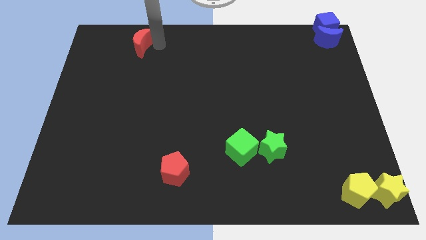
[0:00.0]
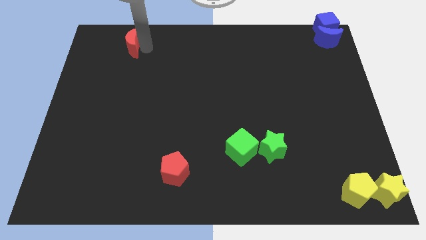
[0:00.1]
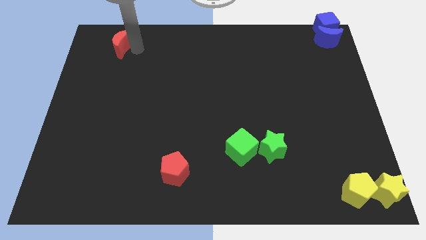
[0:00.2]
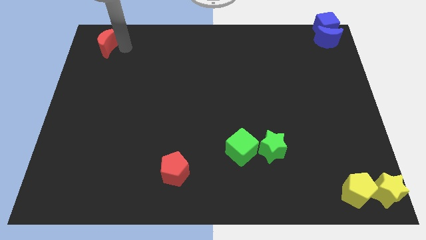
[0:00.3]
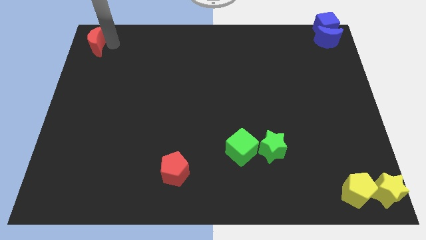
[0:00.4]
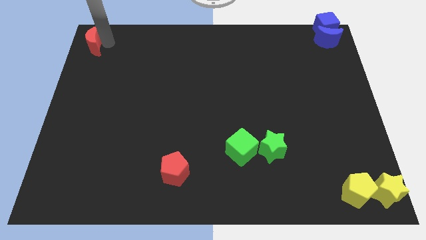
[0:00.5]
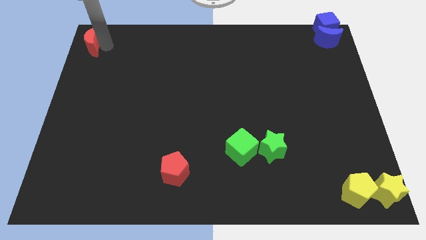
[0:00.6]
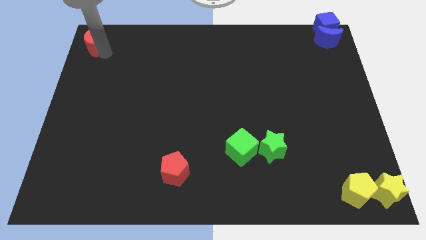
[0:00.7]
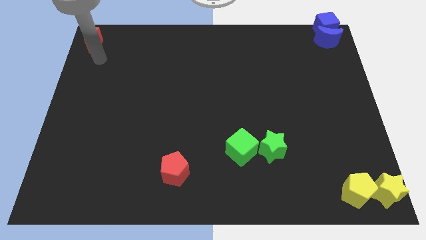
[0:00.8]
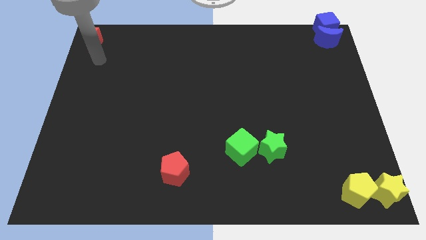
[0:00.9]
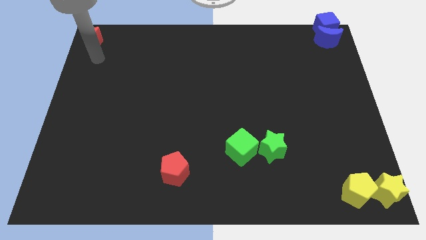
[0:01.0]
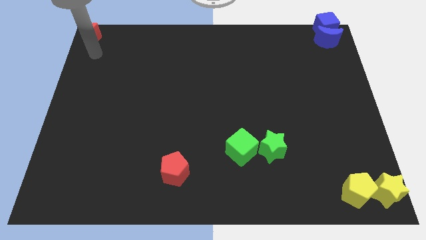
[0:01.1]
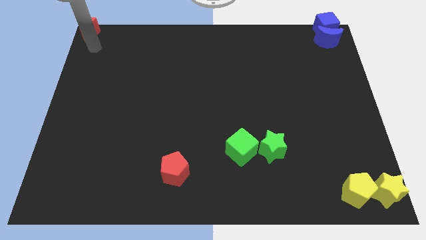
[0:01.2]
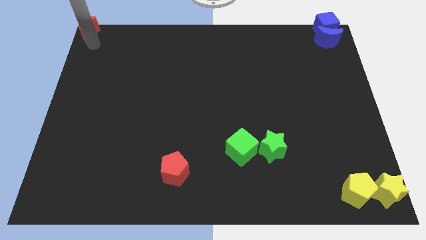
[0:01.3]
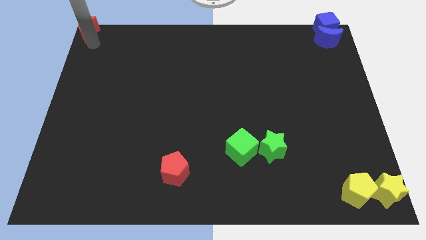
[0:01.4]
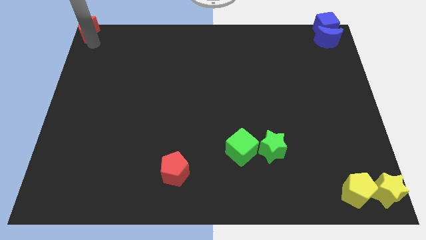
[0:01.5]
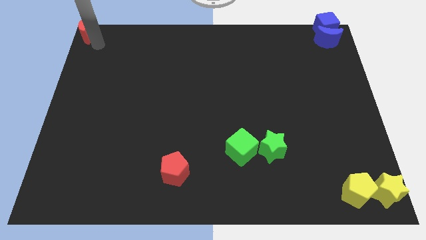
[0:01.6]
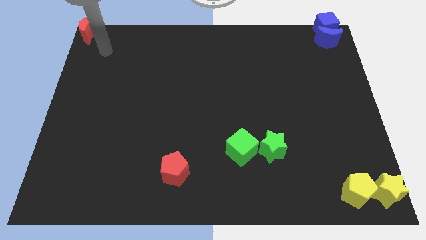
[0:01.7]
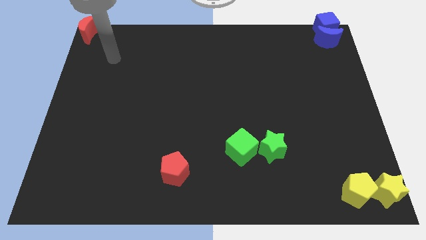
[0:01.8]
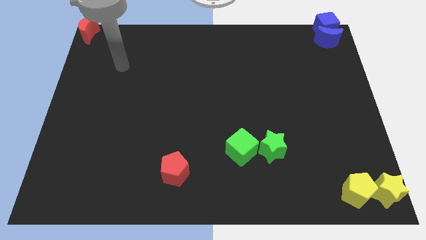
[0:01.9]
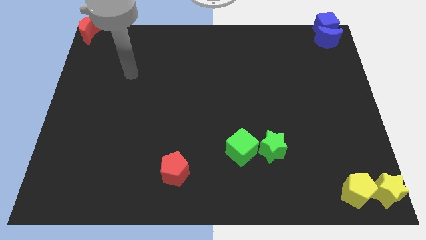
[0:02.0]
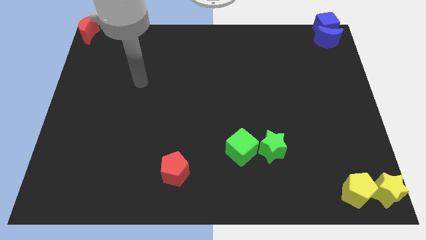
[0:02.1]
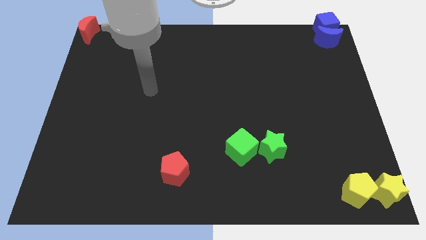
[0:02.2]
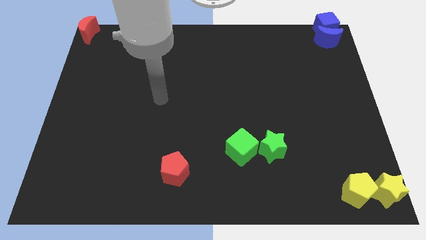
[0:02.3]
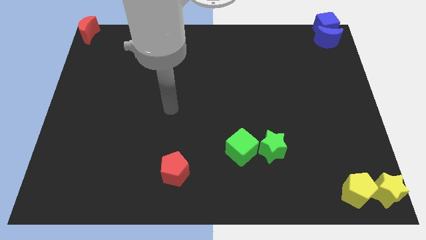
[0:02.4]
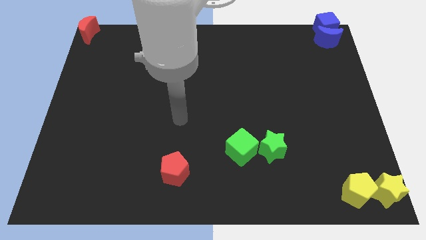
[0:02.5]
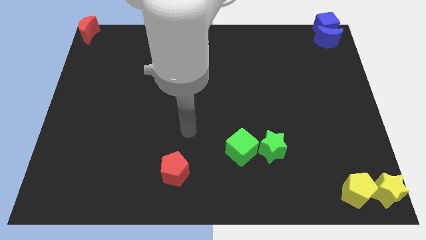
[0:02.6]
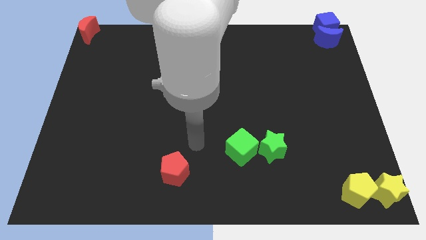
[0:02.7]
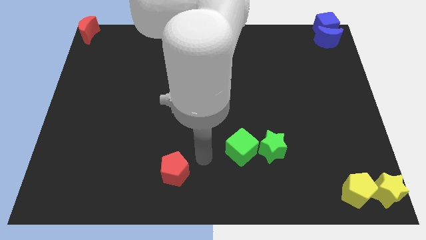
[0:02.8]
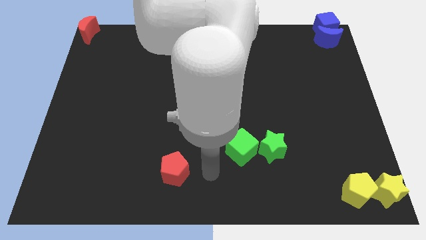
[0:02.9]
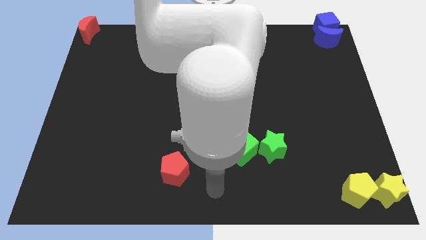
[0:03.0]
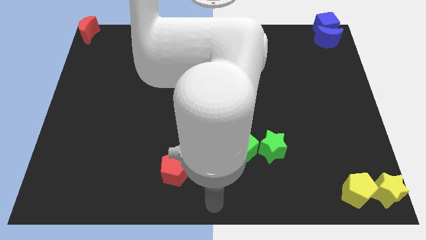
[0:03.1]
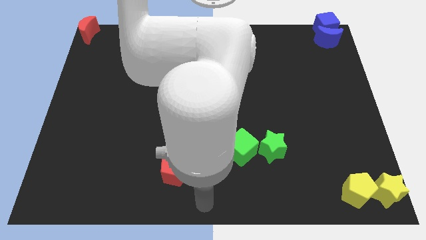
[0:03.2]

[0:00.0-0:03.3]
place the red crescent at the top right corner of the board

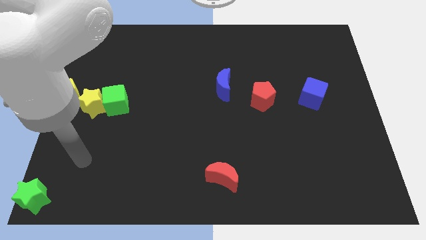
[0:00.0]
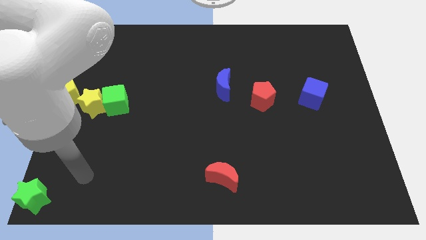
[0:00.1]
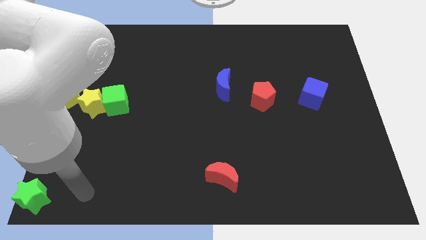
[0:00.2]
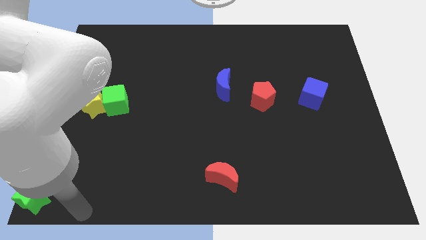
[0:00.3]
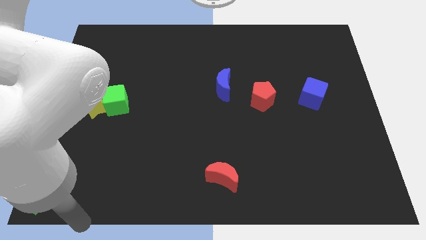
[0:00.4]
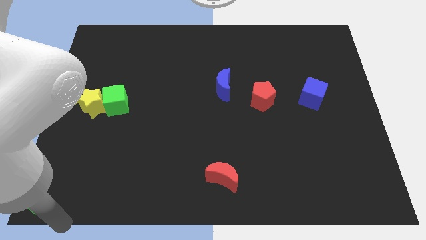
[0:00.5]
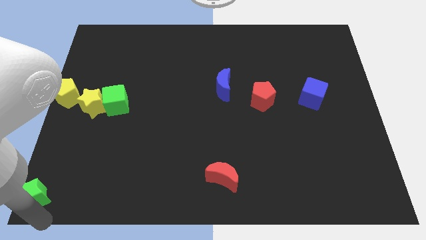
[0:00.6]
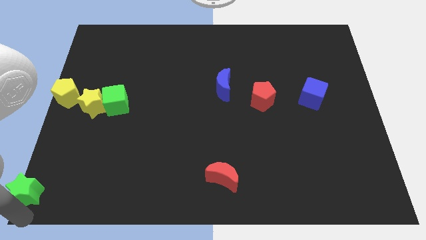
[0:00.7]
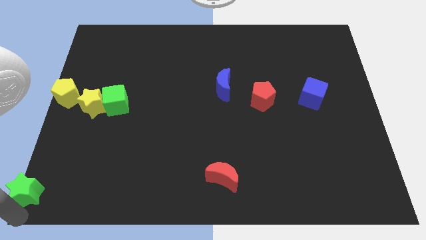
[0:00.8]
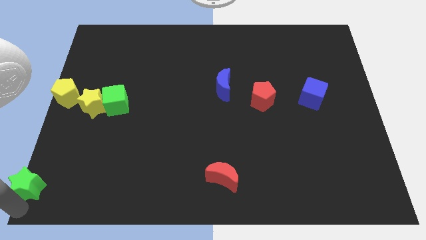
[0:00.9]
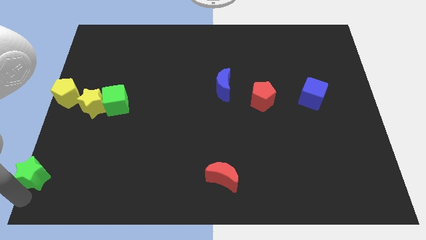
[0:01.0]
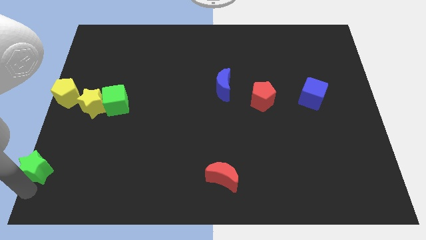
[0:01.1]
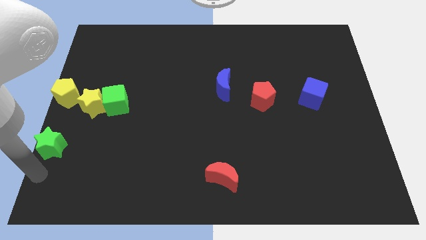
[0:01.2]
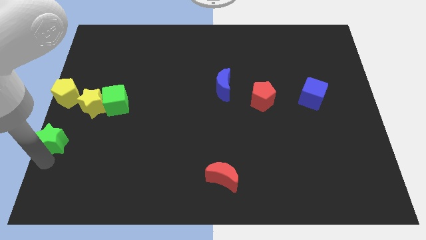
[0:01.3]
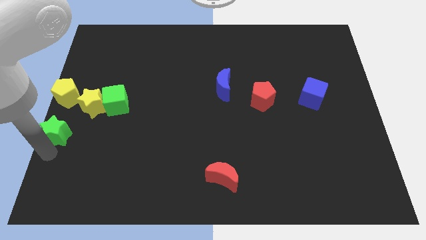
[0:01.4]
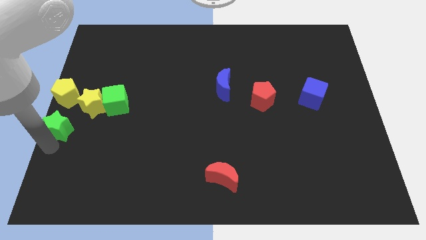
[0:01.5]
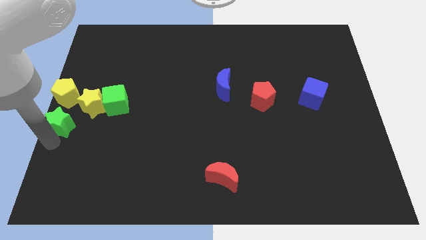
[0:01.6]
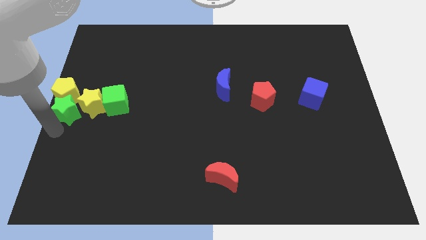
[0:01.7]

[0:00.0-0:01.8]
place the green star below the yellow pentagon

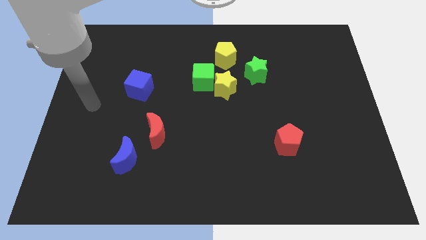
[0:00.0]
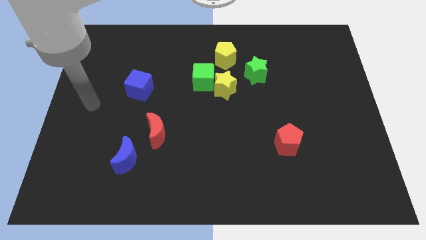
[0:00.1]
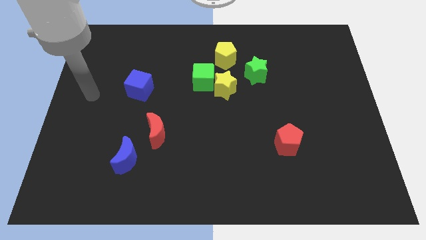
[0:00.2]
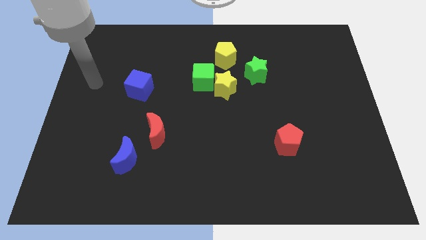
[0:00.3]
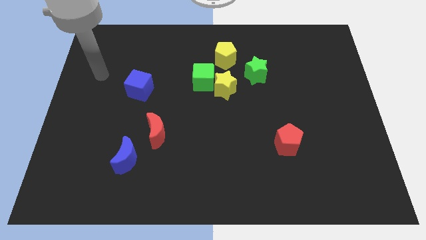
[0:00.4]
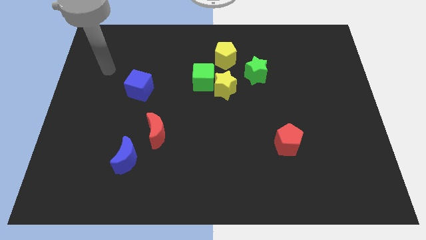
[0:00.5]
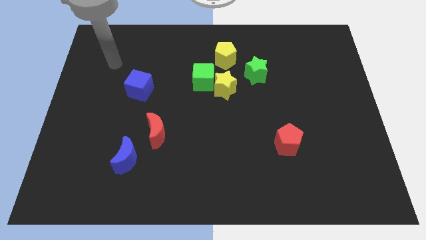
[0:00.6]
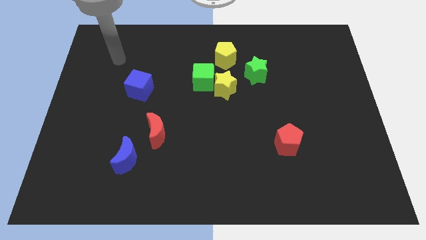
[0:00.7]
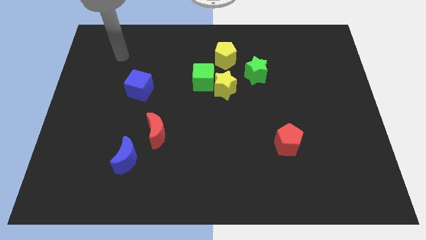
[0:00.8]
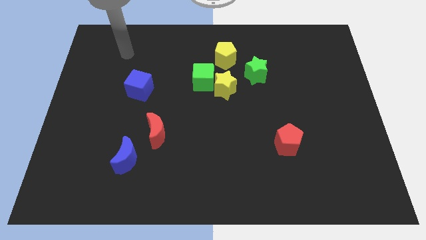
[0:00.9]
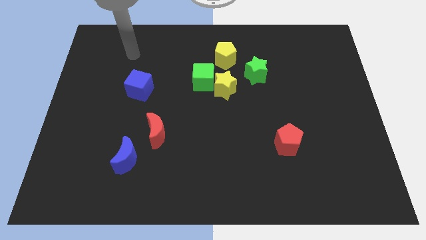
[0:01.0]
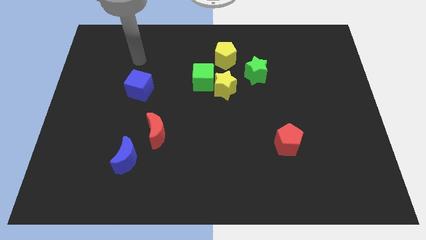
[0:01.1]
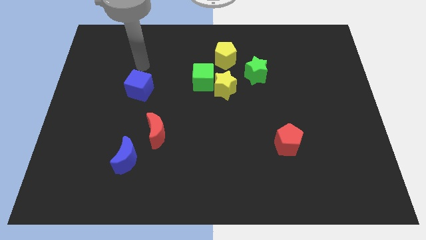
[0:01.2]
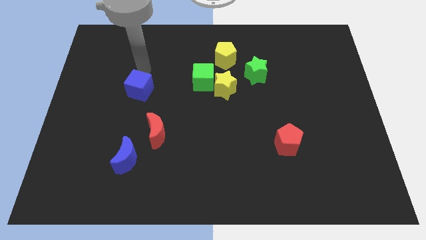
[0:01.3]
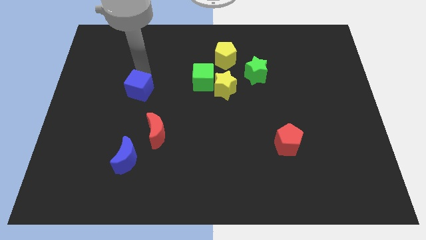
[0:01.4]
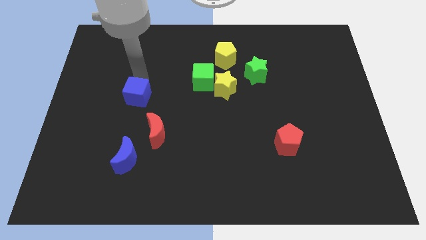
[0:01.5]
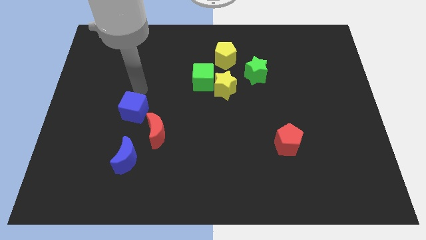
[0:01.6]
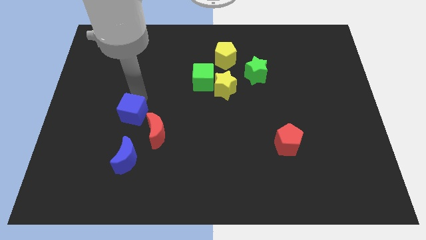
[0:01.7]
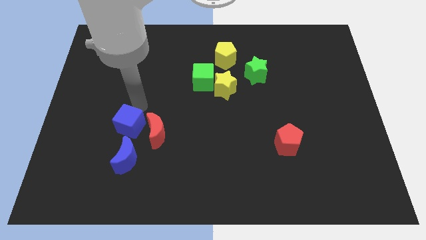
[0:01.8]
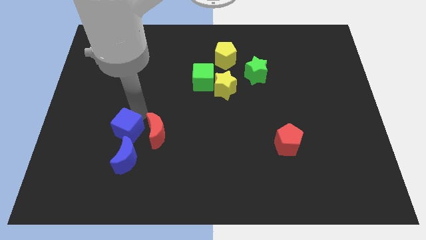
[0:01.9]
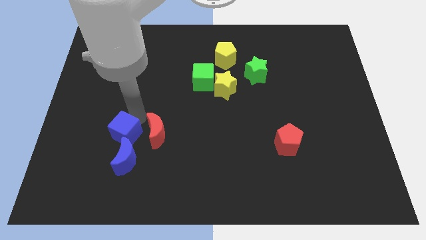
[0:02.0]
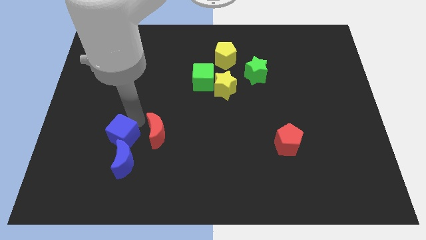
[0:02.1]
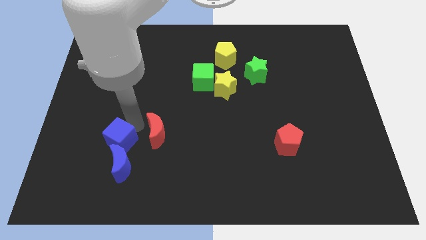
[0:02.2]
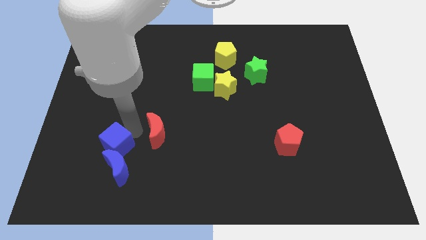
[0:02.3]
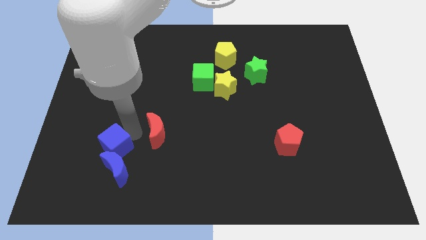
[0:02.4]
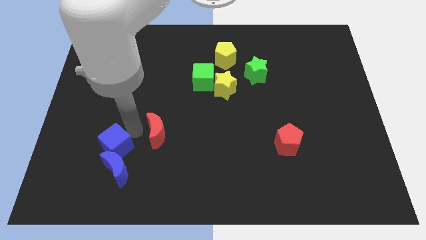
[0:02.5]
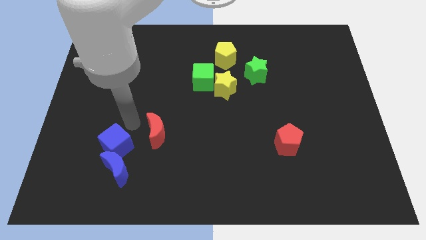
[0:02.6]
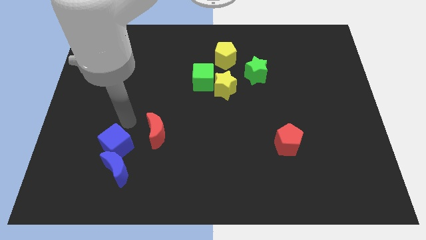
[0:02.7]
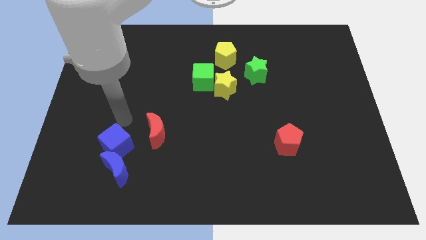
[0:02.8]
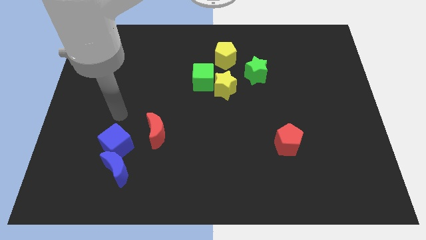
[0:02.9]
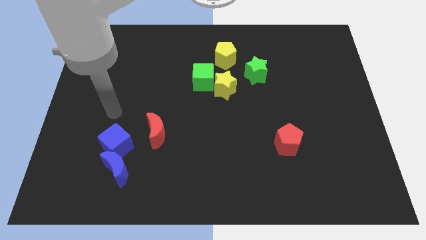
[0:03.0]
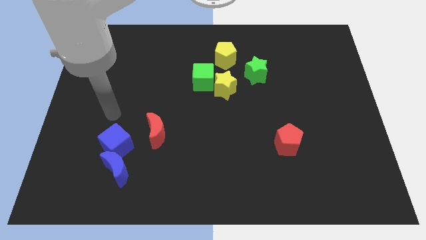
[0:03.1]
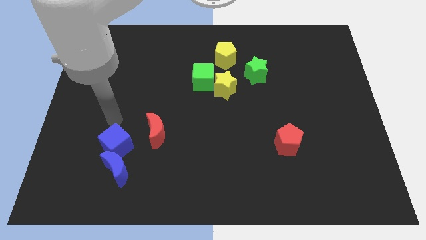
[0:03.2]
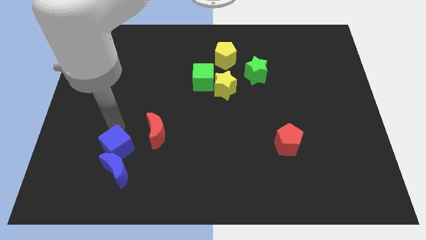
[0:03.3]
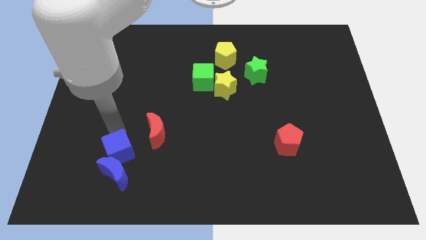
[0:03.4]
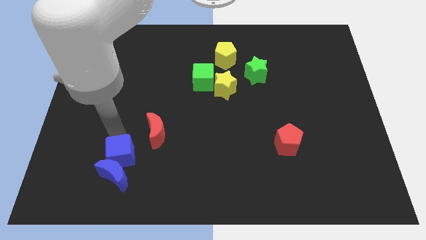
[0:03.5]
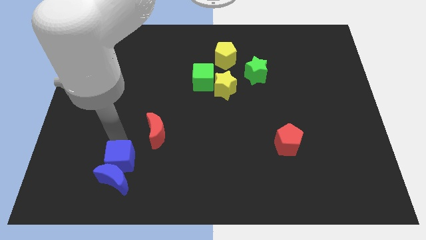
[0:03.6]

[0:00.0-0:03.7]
push the blue cube into the blue moon

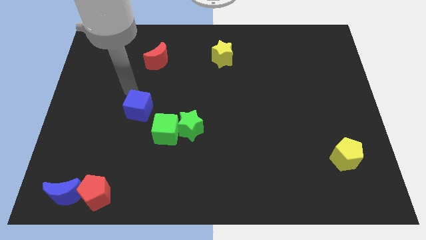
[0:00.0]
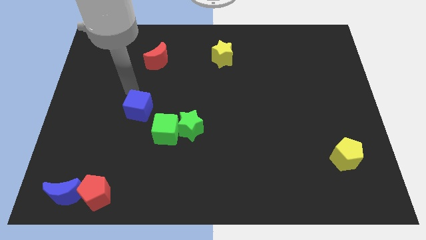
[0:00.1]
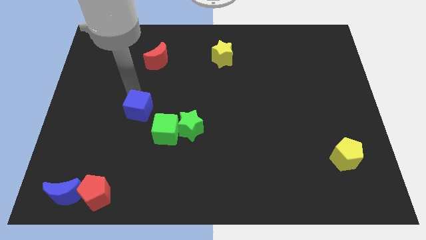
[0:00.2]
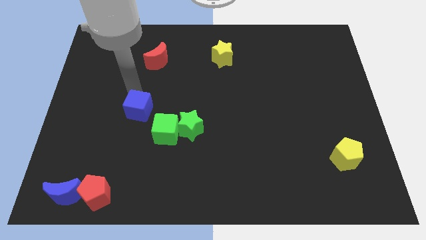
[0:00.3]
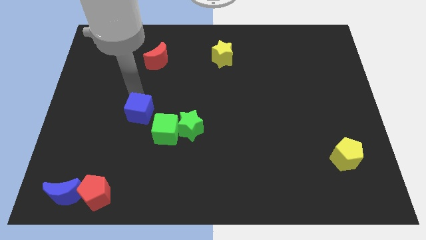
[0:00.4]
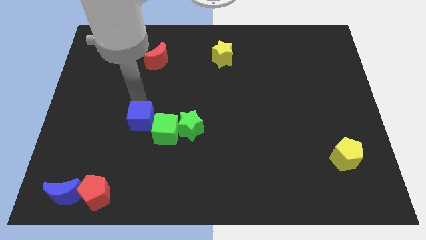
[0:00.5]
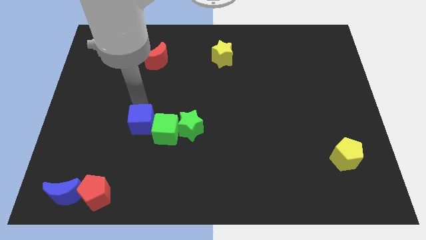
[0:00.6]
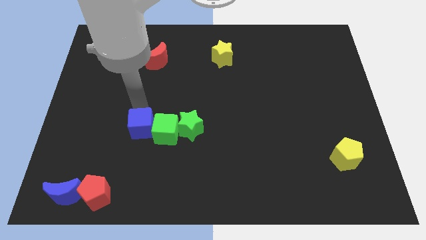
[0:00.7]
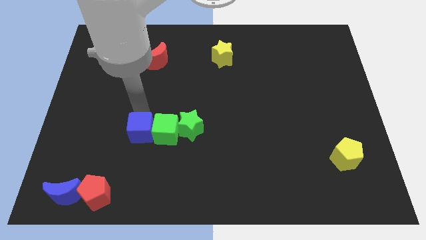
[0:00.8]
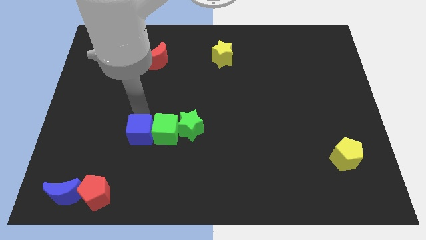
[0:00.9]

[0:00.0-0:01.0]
move the blue cube into the green cube
